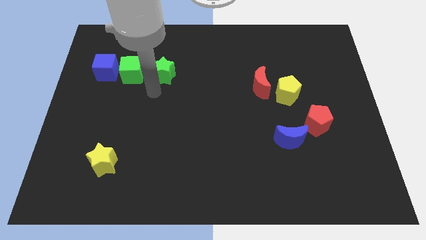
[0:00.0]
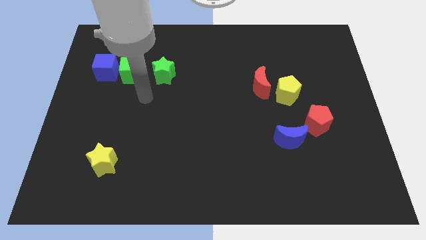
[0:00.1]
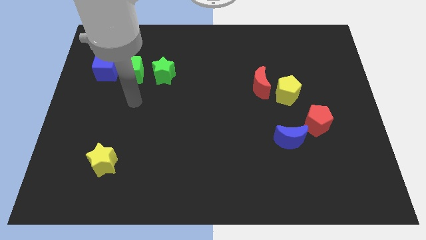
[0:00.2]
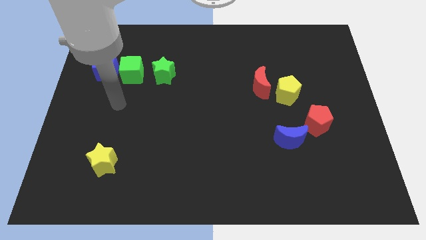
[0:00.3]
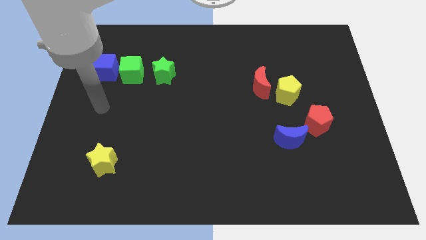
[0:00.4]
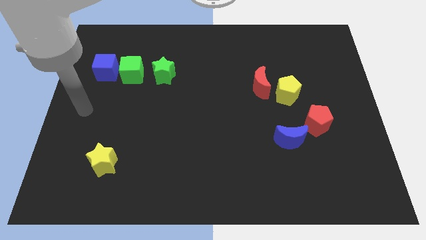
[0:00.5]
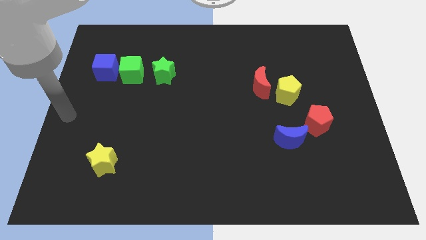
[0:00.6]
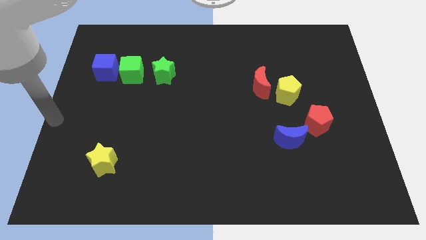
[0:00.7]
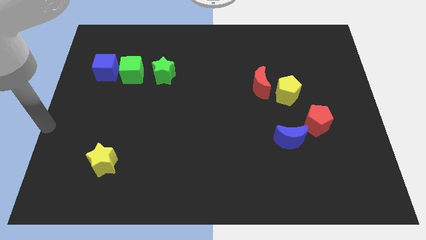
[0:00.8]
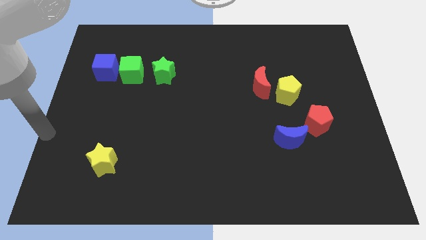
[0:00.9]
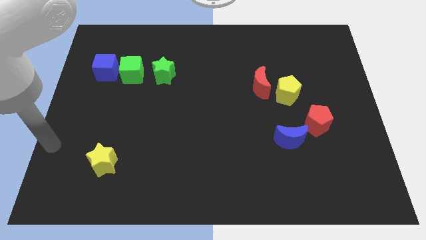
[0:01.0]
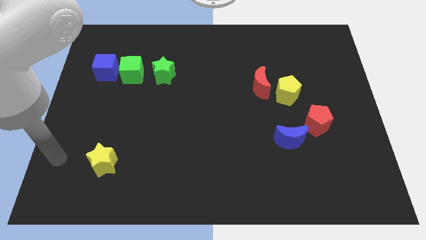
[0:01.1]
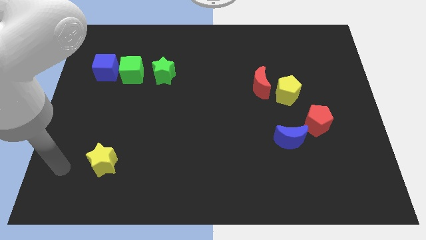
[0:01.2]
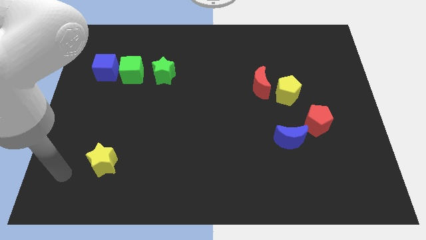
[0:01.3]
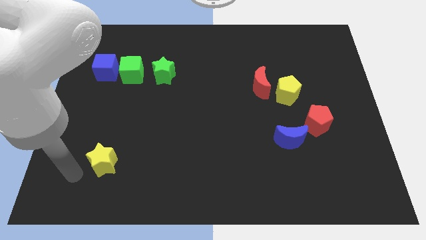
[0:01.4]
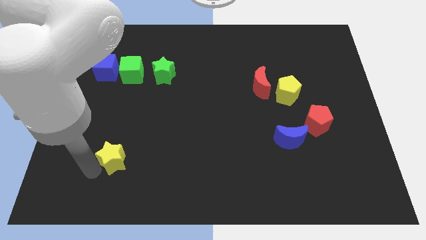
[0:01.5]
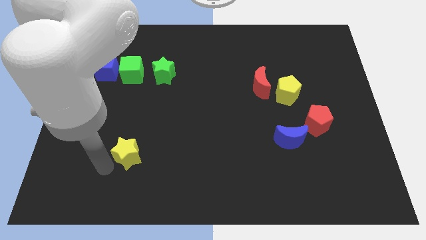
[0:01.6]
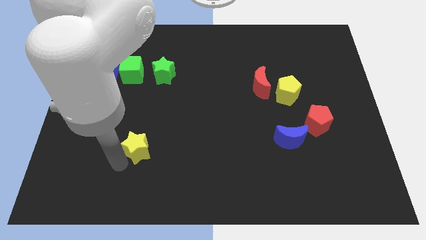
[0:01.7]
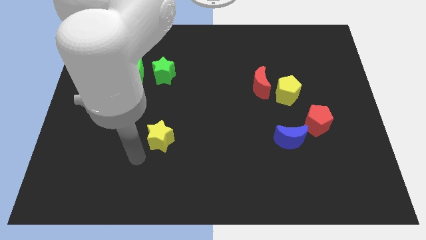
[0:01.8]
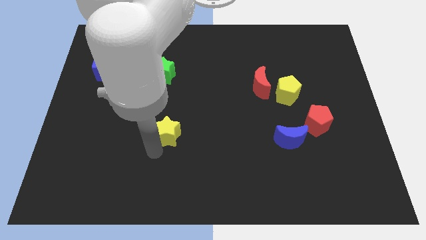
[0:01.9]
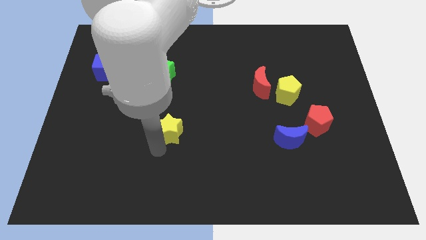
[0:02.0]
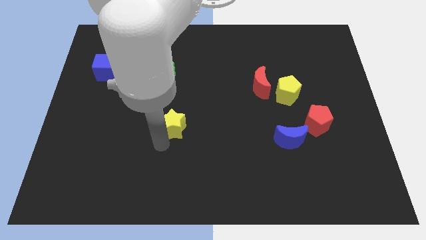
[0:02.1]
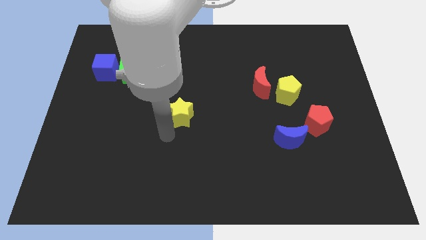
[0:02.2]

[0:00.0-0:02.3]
place the yellow star below the green cube

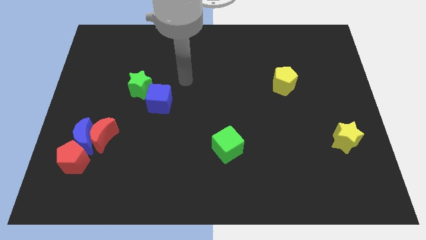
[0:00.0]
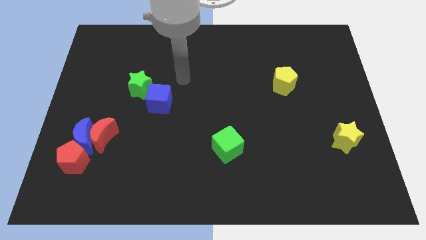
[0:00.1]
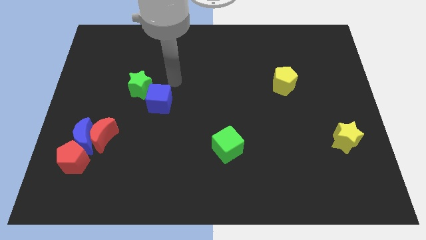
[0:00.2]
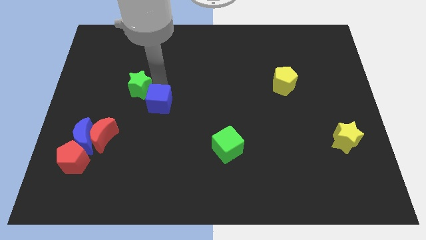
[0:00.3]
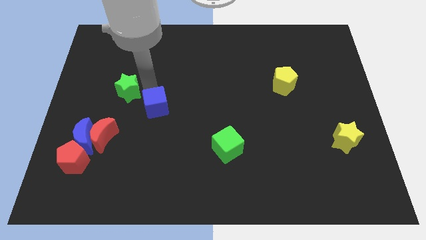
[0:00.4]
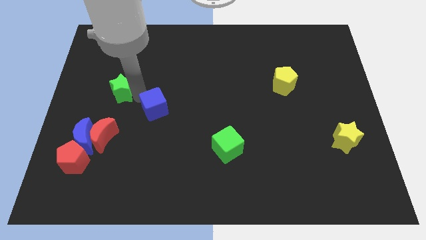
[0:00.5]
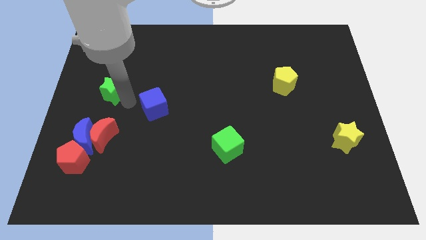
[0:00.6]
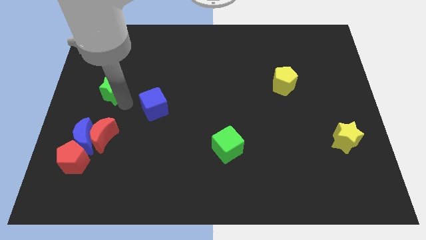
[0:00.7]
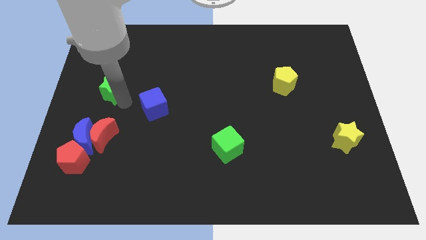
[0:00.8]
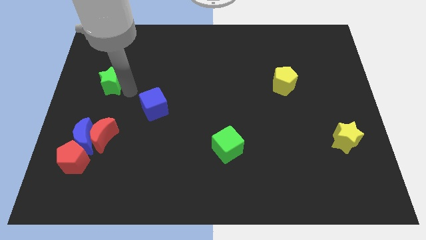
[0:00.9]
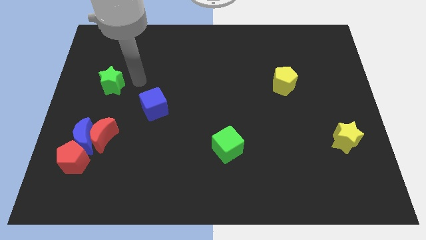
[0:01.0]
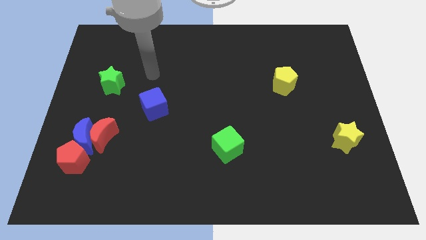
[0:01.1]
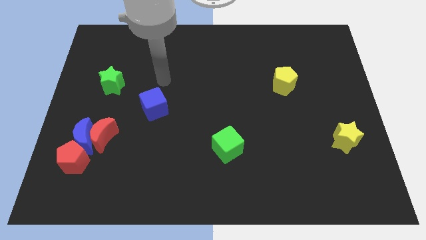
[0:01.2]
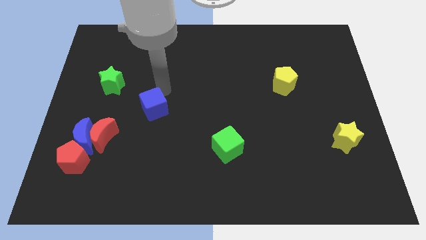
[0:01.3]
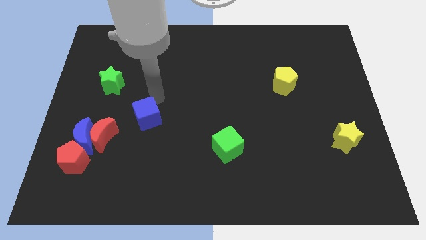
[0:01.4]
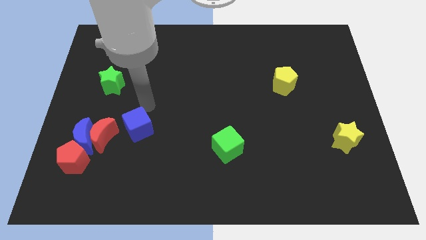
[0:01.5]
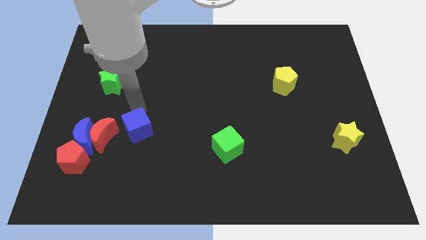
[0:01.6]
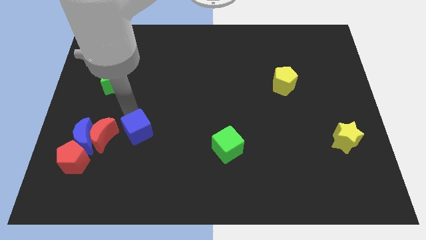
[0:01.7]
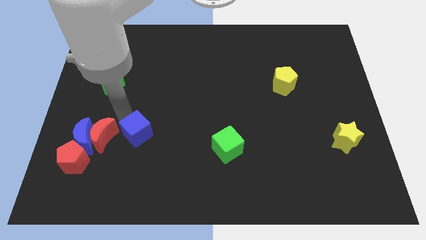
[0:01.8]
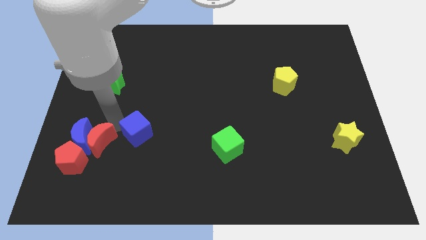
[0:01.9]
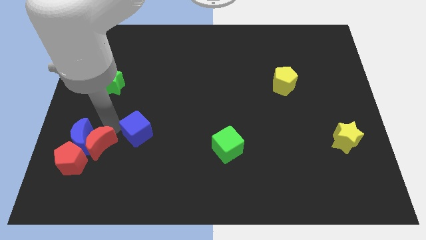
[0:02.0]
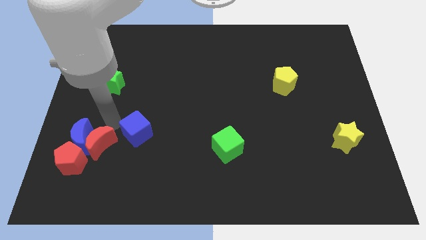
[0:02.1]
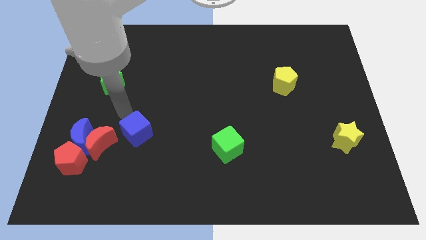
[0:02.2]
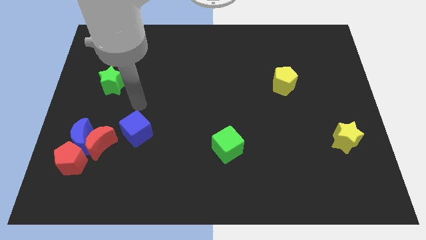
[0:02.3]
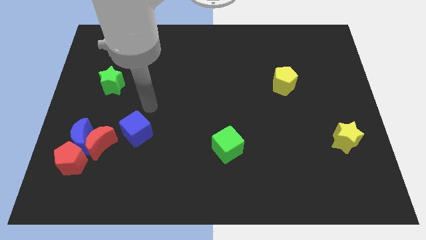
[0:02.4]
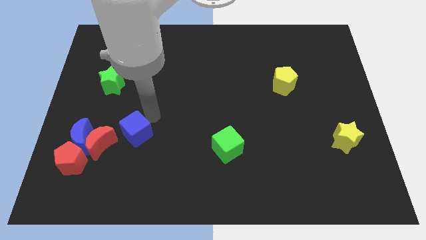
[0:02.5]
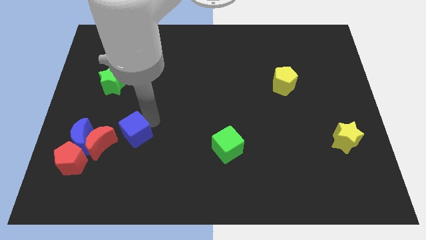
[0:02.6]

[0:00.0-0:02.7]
separate the blue cube from the green star

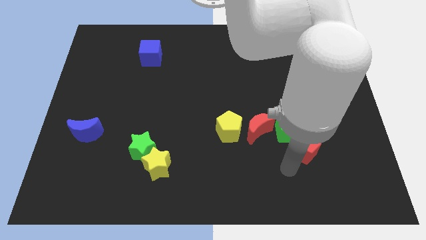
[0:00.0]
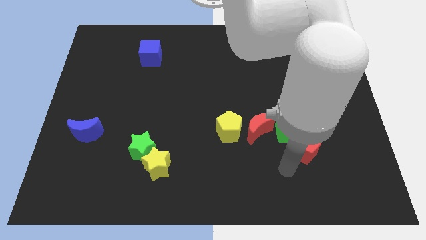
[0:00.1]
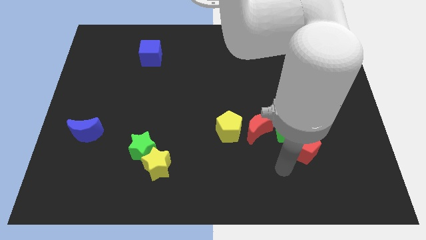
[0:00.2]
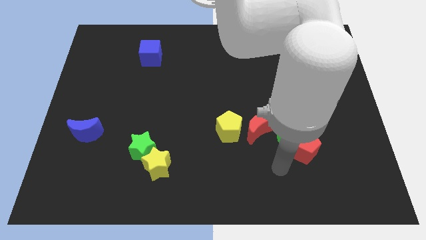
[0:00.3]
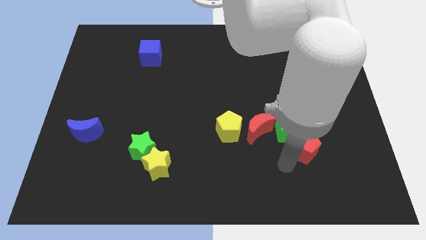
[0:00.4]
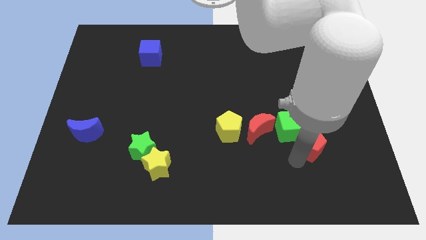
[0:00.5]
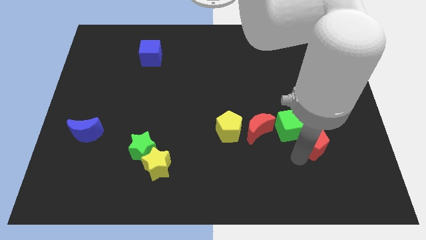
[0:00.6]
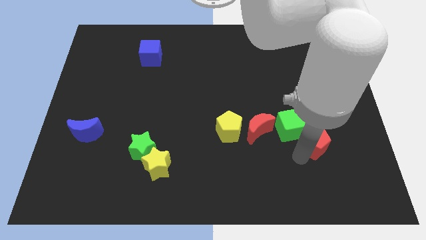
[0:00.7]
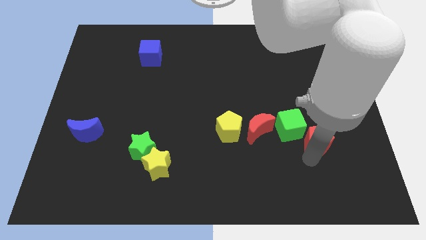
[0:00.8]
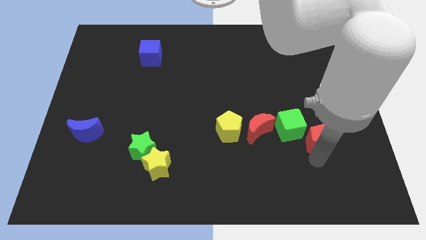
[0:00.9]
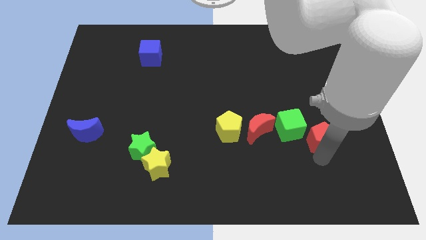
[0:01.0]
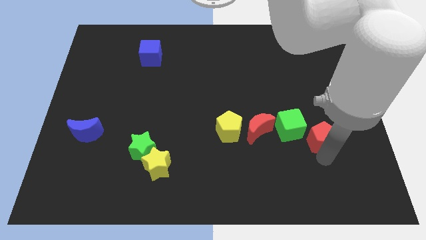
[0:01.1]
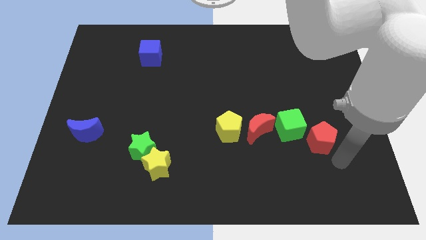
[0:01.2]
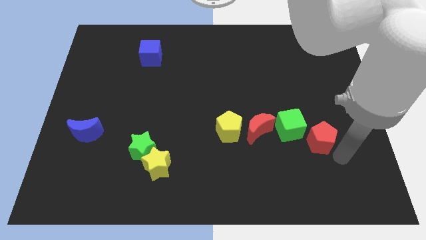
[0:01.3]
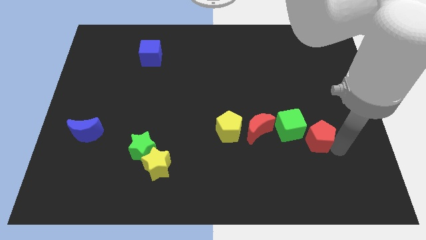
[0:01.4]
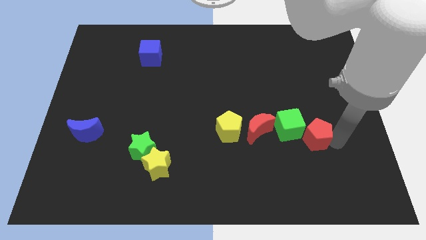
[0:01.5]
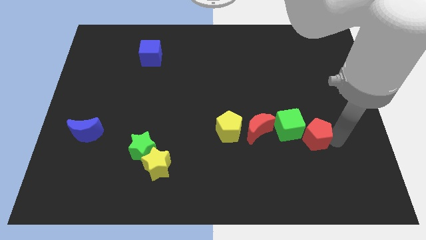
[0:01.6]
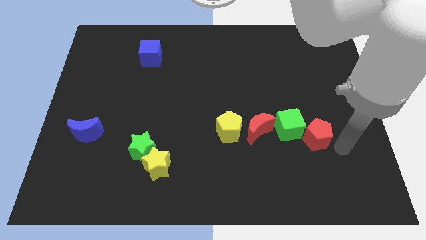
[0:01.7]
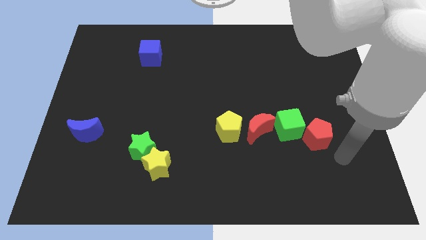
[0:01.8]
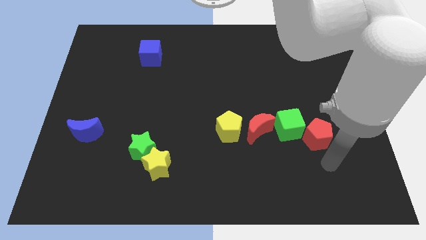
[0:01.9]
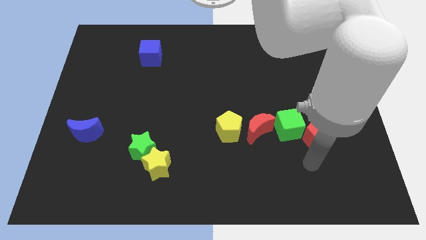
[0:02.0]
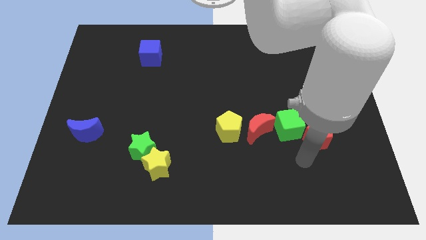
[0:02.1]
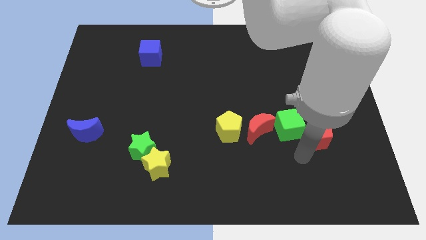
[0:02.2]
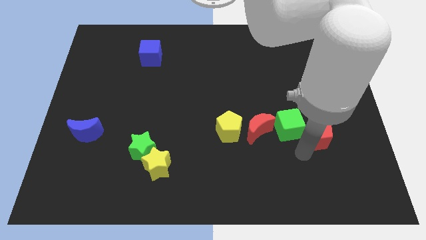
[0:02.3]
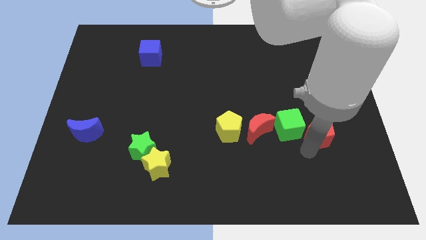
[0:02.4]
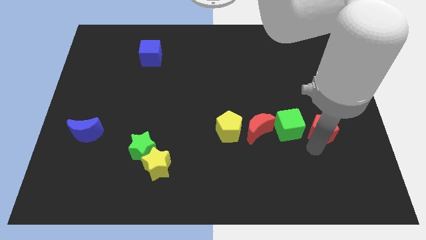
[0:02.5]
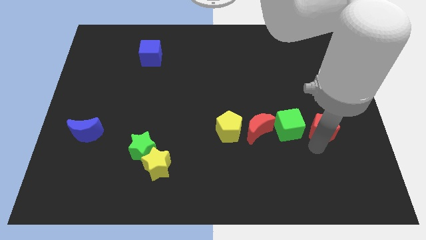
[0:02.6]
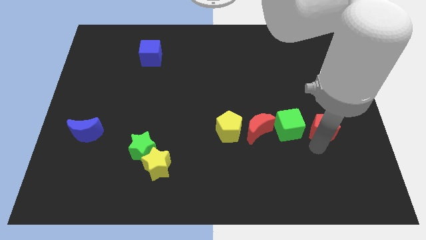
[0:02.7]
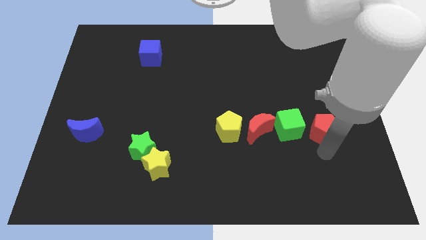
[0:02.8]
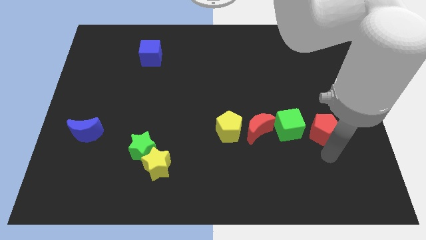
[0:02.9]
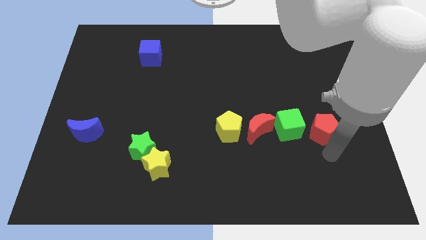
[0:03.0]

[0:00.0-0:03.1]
push the red pentagon to the right of the green cube

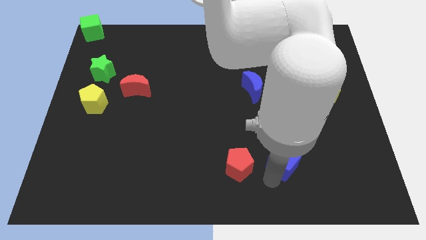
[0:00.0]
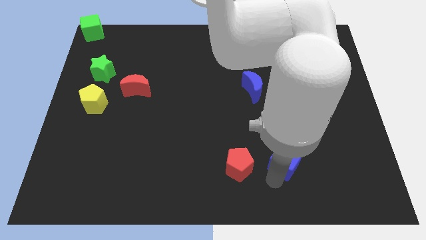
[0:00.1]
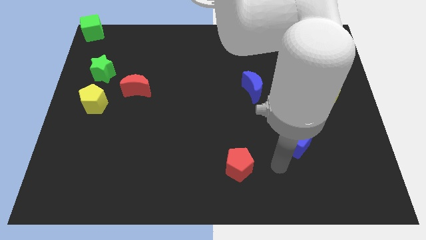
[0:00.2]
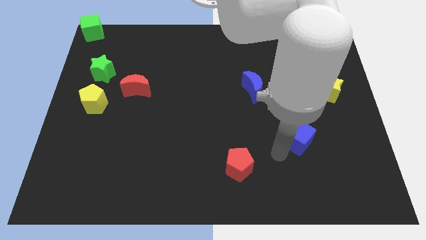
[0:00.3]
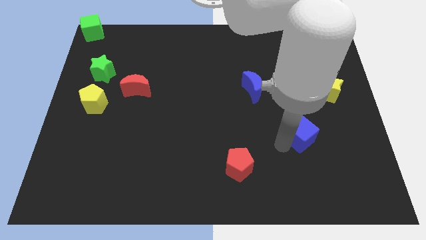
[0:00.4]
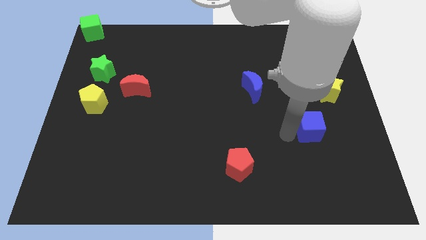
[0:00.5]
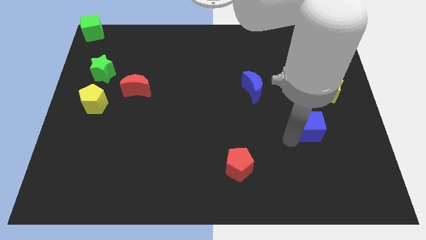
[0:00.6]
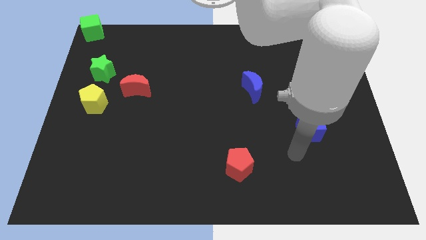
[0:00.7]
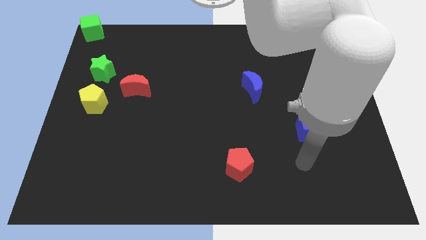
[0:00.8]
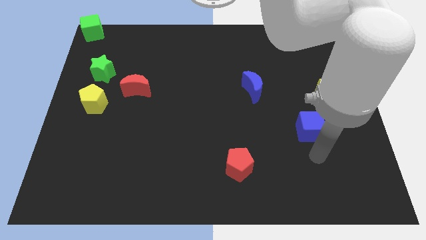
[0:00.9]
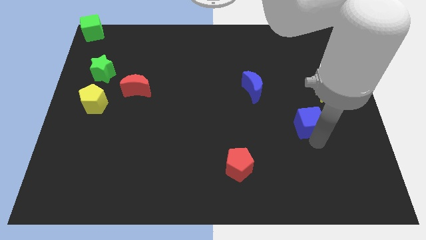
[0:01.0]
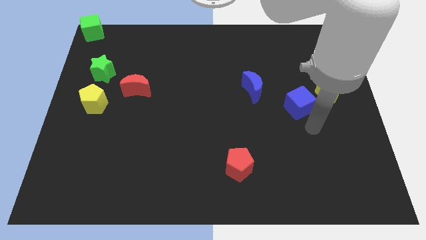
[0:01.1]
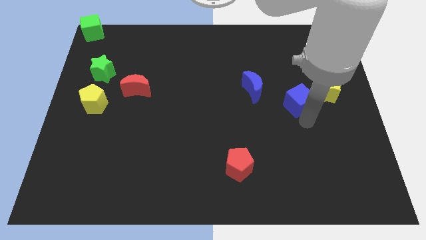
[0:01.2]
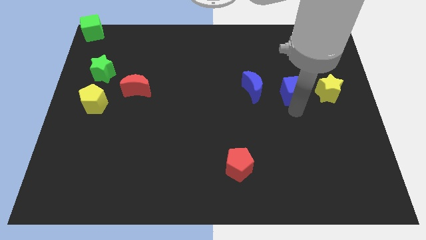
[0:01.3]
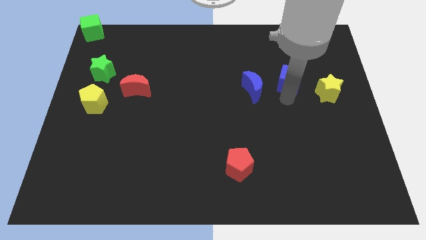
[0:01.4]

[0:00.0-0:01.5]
reposition the blue cube in between the yellow star and blue crescent
